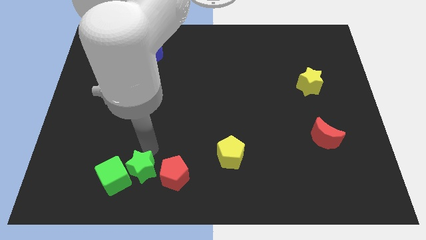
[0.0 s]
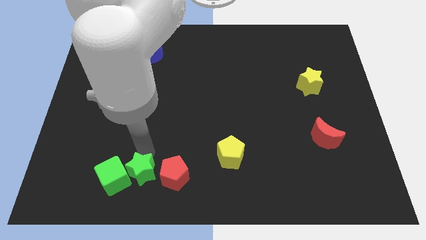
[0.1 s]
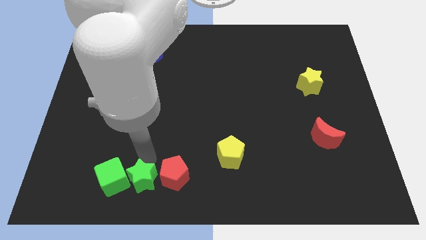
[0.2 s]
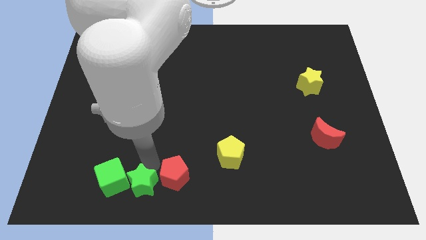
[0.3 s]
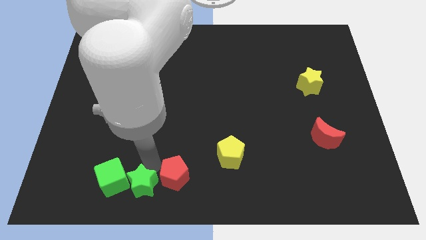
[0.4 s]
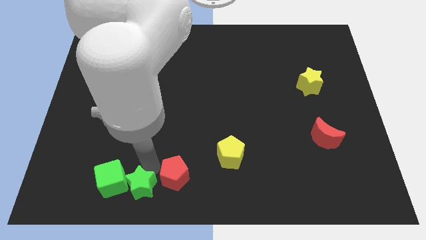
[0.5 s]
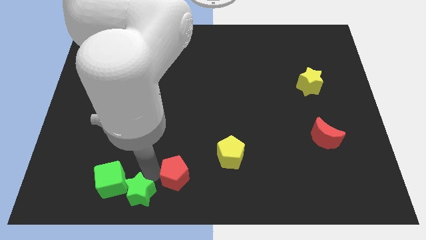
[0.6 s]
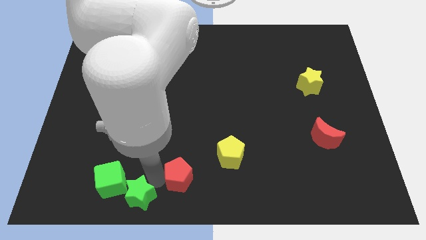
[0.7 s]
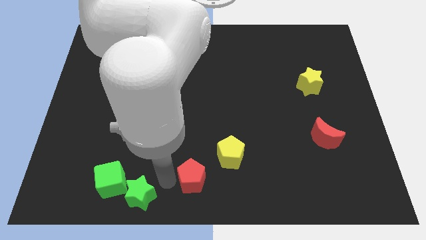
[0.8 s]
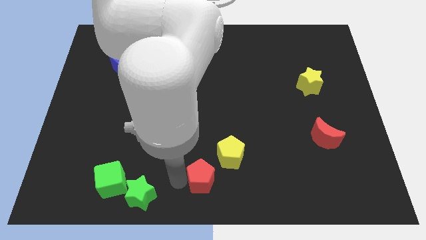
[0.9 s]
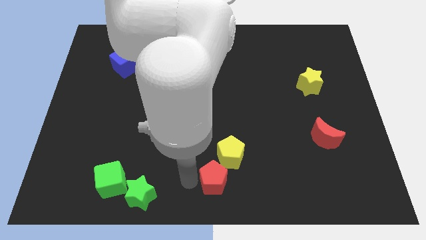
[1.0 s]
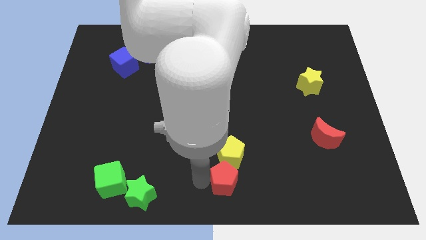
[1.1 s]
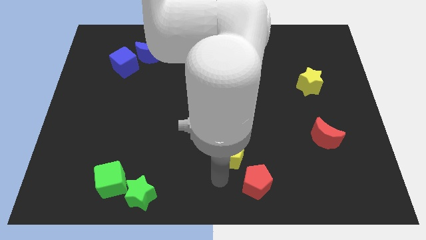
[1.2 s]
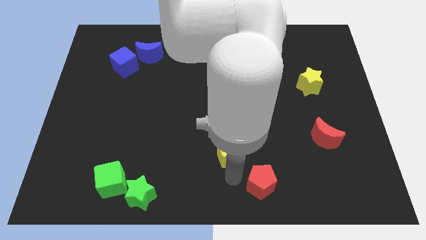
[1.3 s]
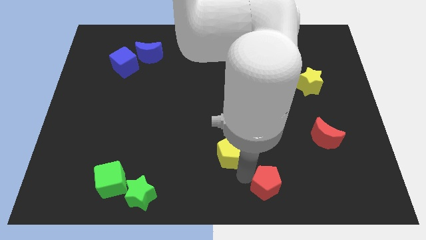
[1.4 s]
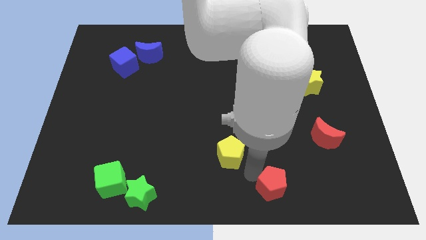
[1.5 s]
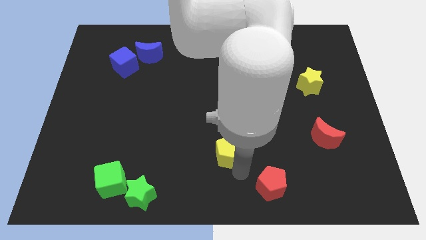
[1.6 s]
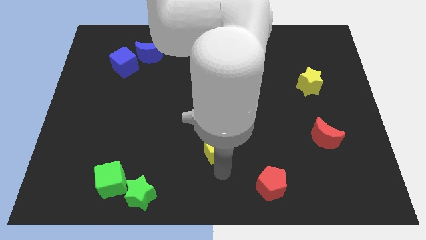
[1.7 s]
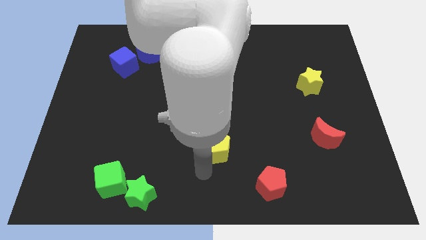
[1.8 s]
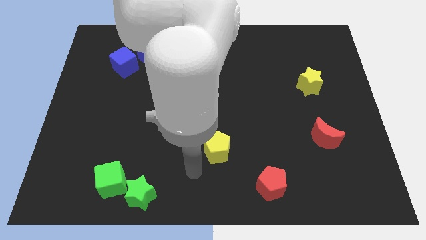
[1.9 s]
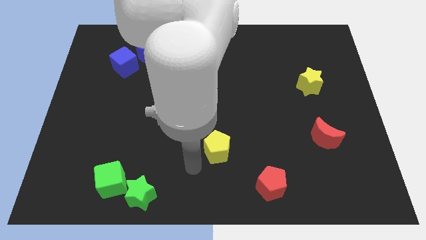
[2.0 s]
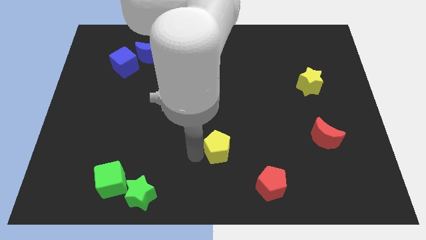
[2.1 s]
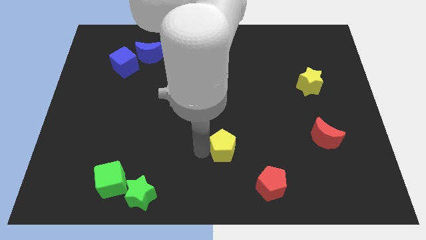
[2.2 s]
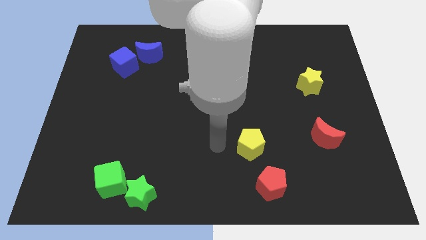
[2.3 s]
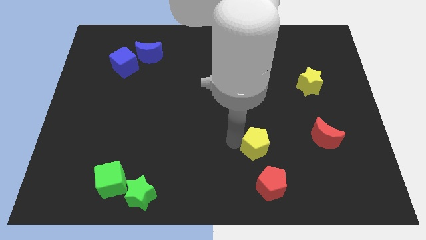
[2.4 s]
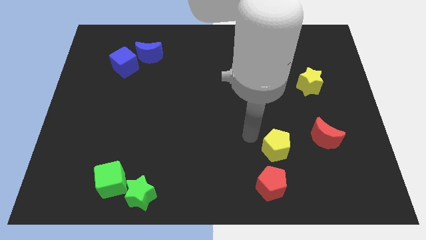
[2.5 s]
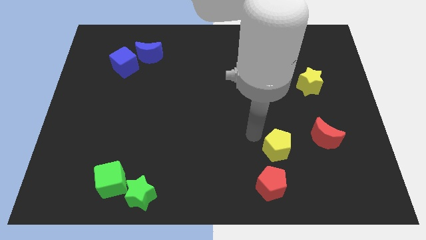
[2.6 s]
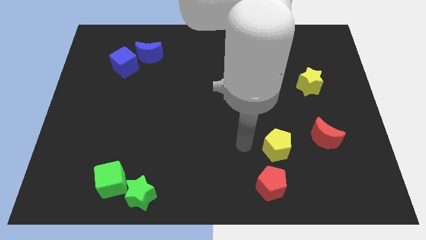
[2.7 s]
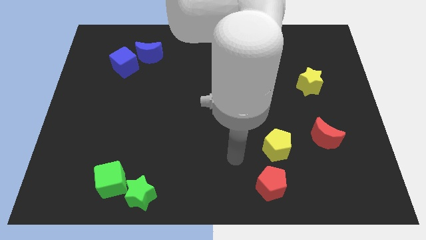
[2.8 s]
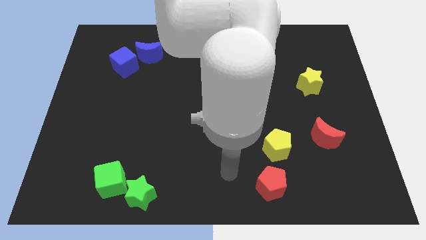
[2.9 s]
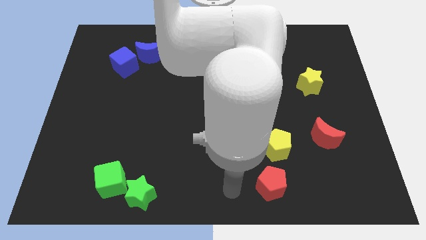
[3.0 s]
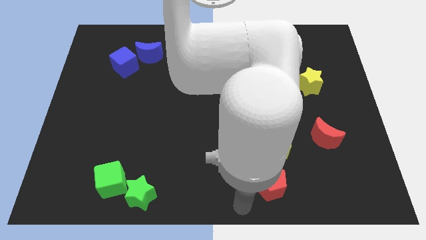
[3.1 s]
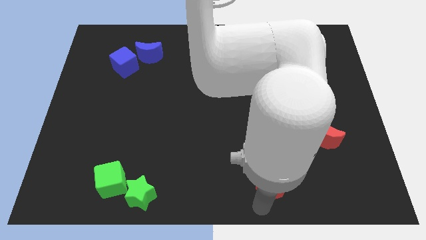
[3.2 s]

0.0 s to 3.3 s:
push the red pentagon and yellow pentagon towards the right side

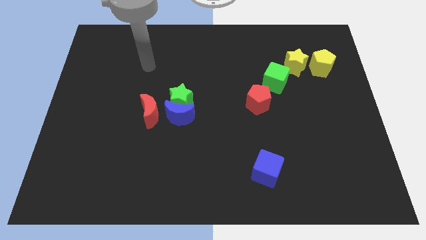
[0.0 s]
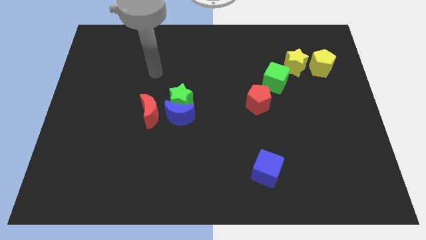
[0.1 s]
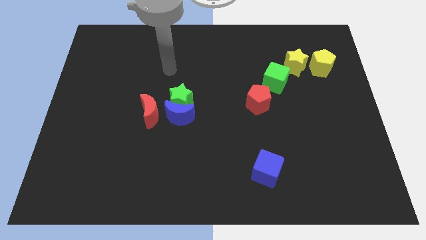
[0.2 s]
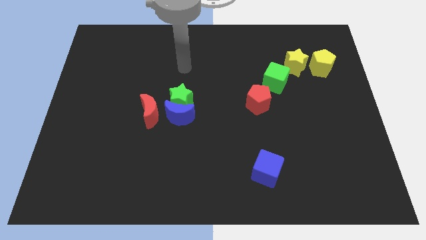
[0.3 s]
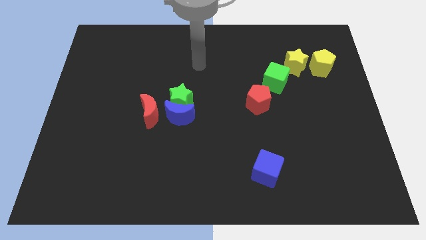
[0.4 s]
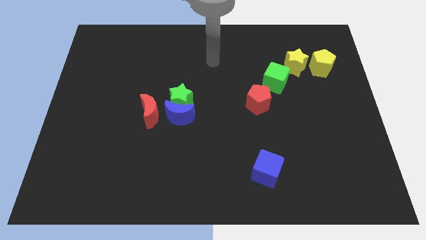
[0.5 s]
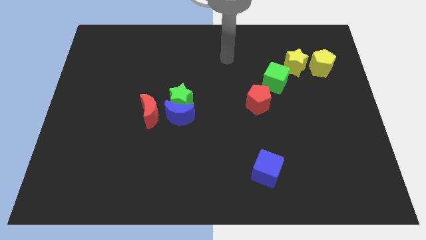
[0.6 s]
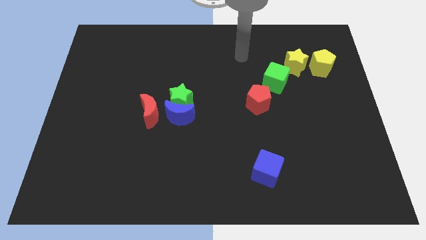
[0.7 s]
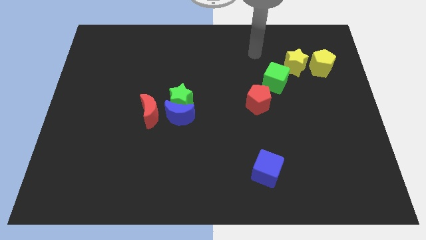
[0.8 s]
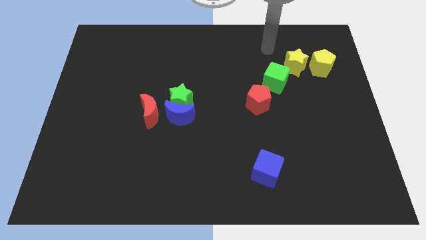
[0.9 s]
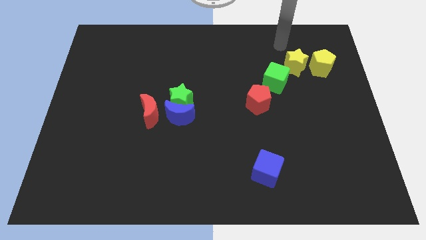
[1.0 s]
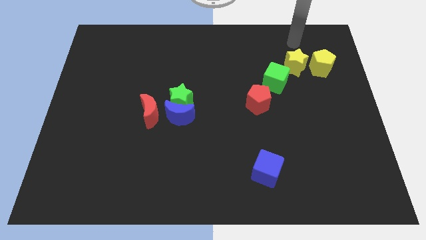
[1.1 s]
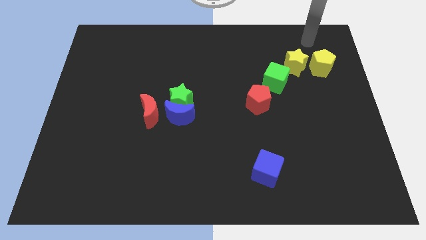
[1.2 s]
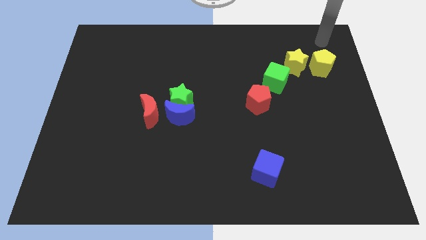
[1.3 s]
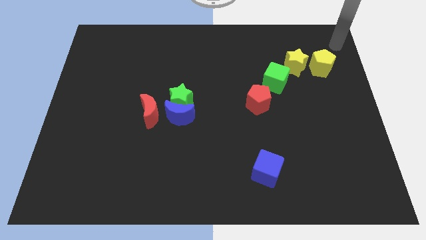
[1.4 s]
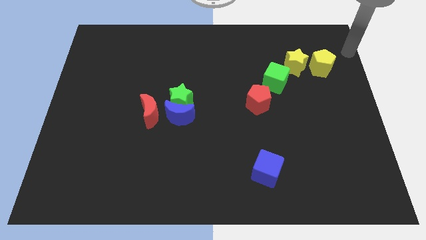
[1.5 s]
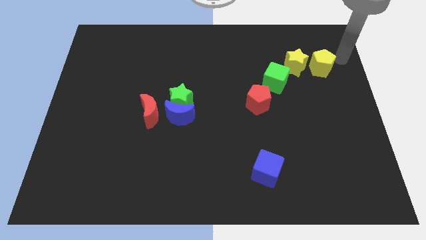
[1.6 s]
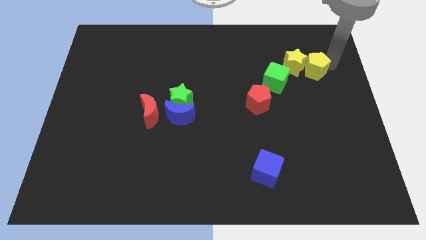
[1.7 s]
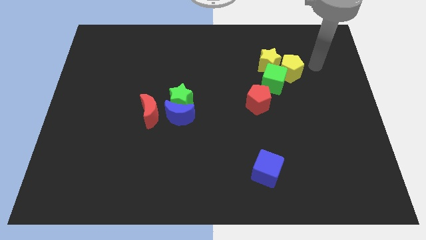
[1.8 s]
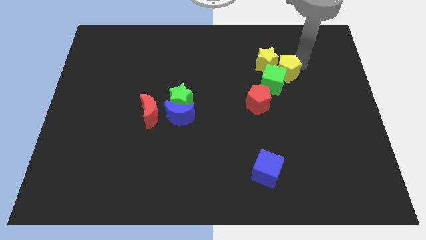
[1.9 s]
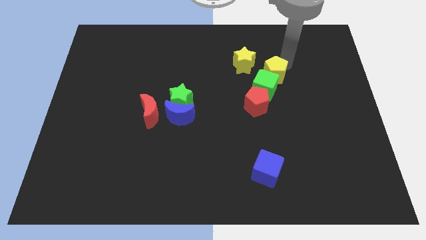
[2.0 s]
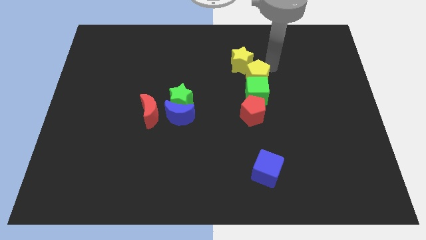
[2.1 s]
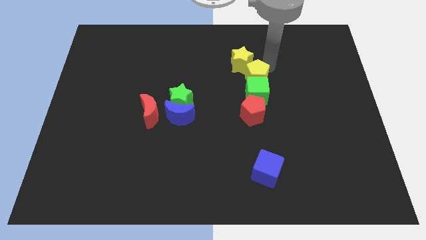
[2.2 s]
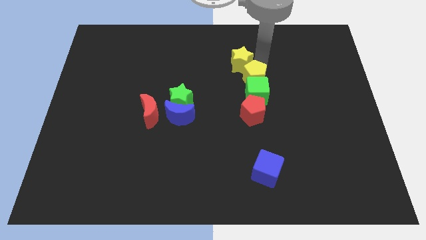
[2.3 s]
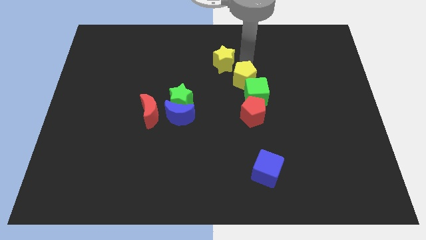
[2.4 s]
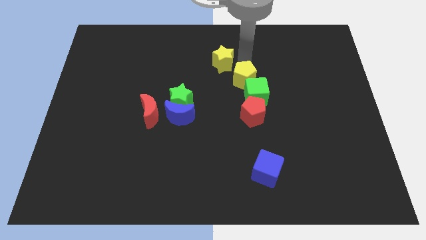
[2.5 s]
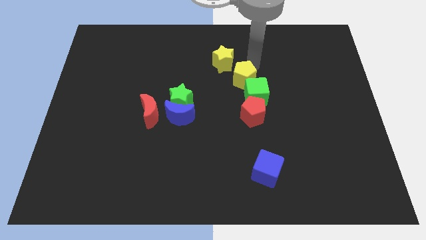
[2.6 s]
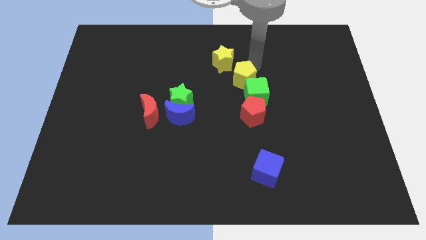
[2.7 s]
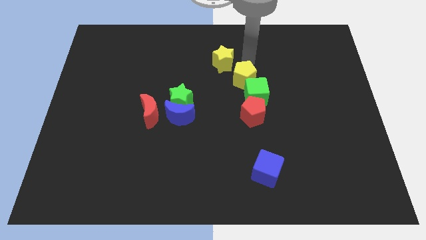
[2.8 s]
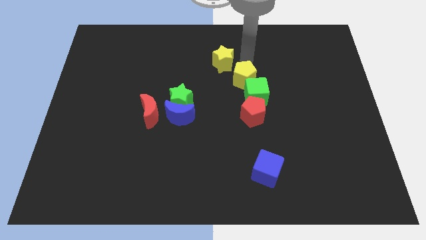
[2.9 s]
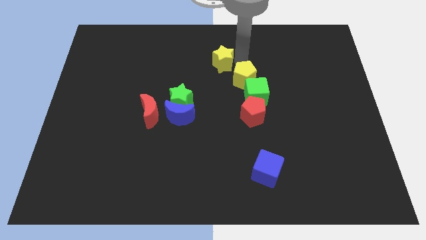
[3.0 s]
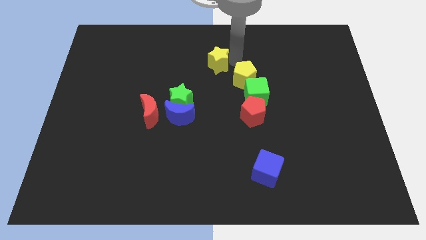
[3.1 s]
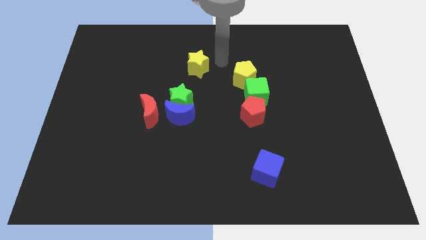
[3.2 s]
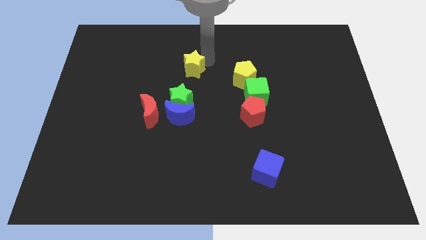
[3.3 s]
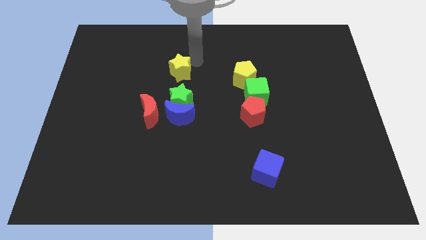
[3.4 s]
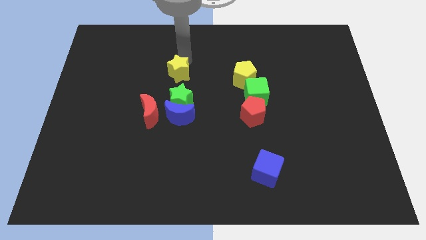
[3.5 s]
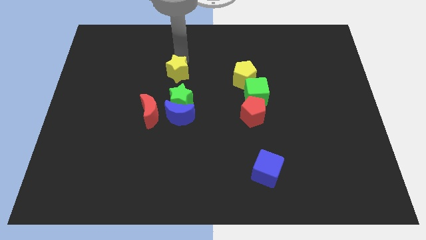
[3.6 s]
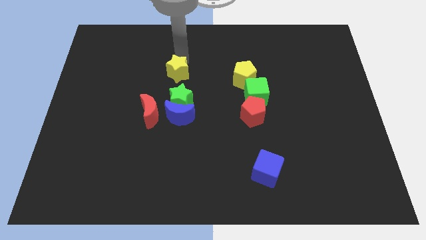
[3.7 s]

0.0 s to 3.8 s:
place the yellow star vertically above the green star

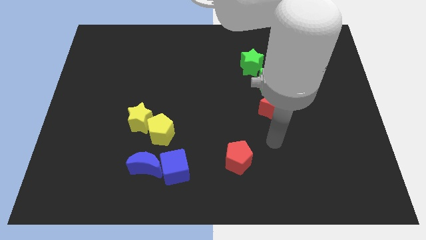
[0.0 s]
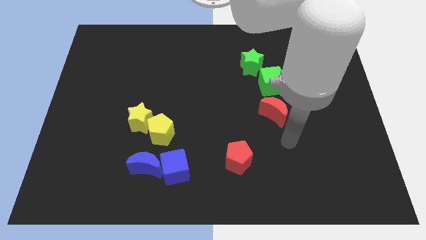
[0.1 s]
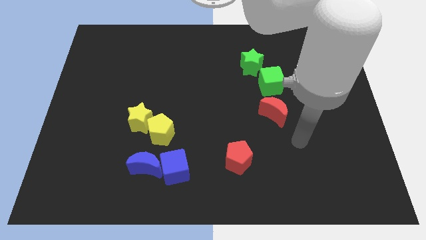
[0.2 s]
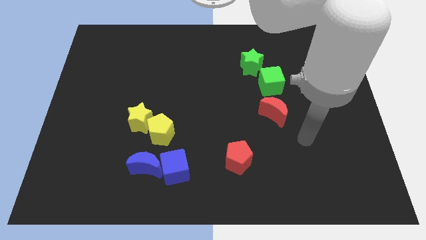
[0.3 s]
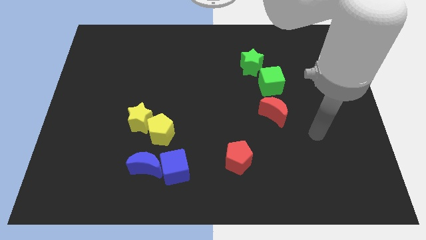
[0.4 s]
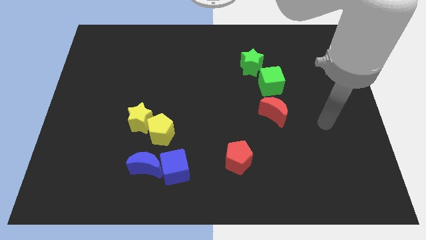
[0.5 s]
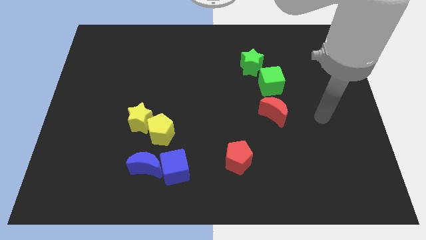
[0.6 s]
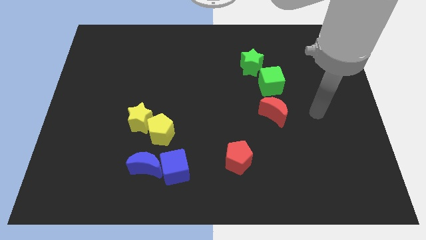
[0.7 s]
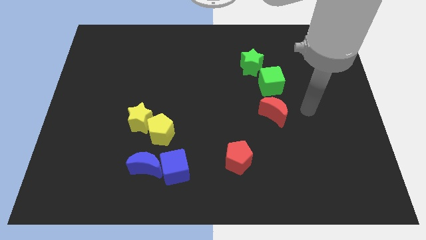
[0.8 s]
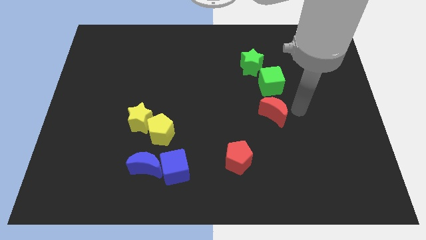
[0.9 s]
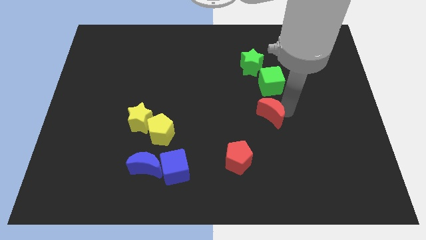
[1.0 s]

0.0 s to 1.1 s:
move the arm to the right side of the red crescent

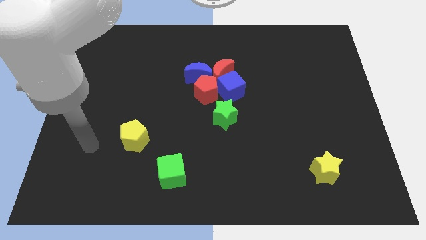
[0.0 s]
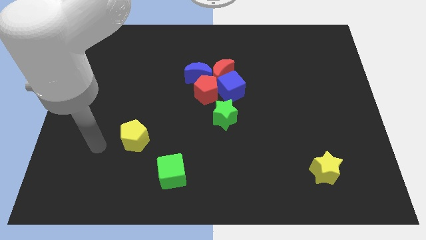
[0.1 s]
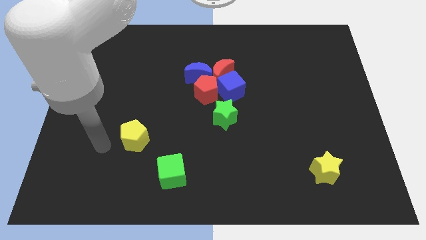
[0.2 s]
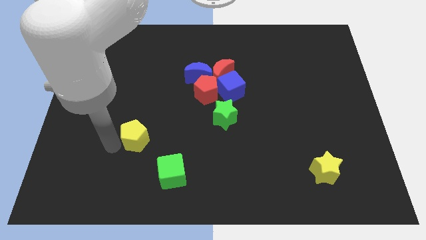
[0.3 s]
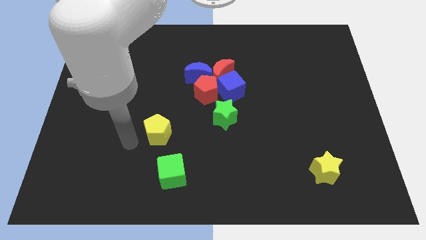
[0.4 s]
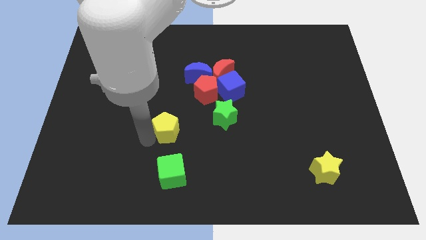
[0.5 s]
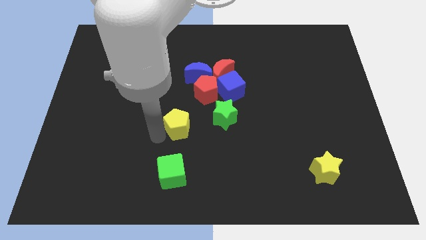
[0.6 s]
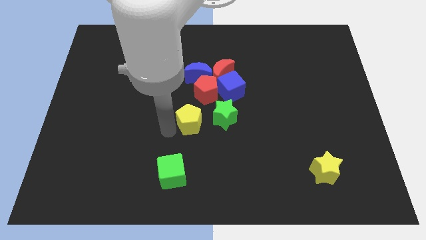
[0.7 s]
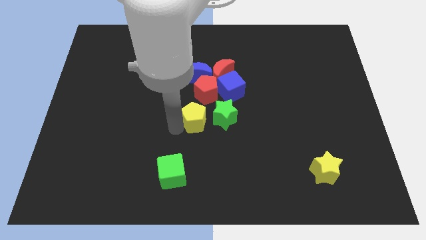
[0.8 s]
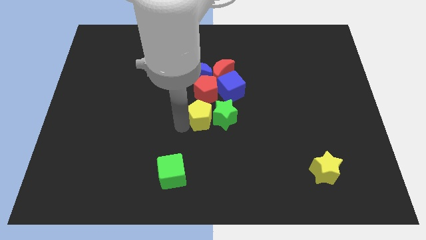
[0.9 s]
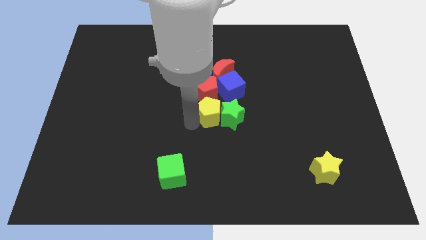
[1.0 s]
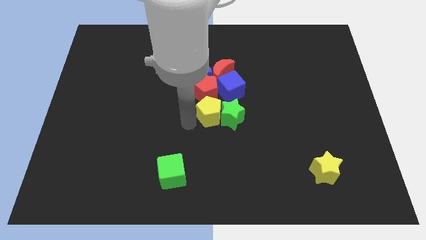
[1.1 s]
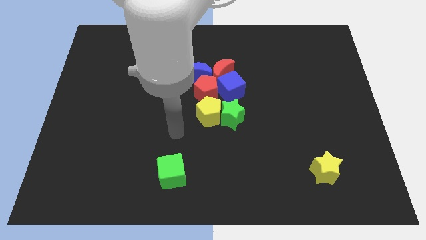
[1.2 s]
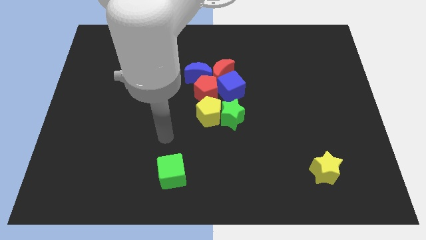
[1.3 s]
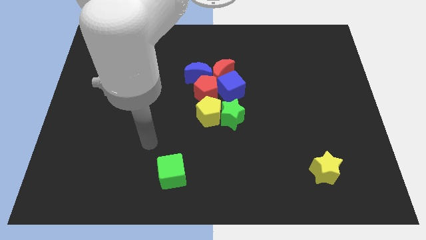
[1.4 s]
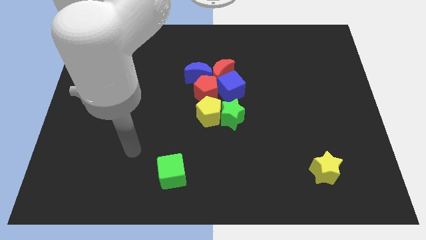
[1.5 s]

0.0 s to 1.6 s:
push the yellow pentagon into green star
